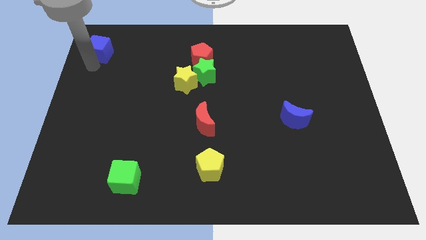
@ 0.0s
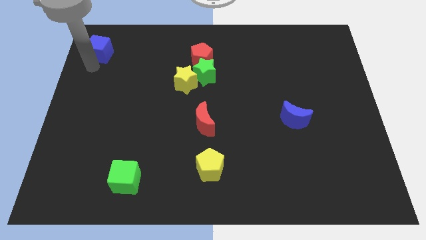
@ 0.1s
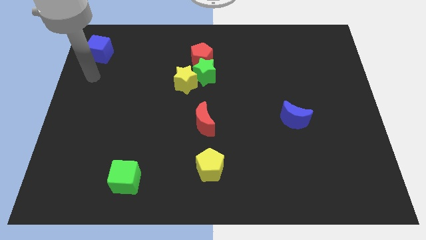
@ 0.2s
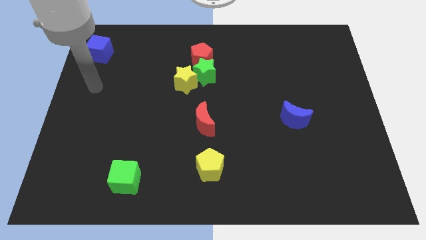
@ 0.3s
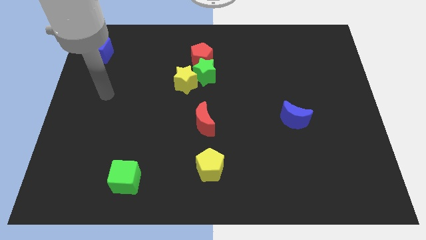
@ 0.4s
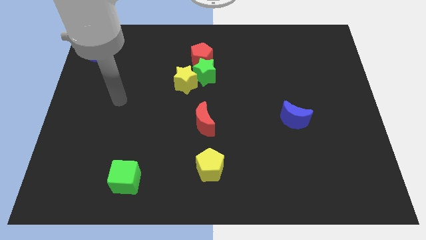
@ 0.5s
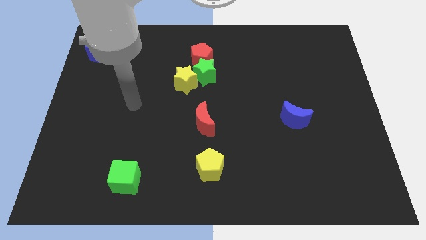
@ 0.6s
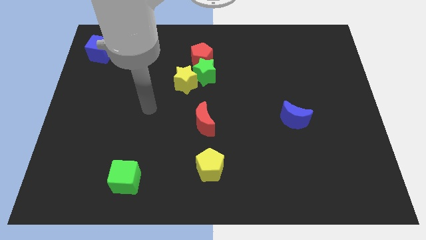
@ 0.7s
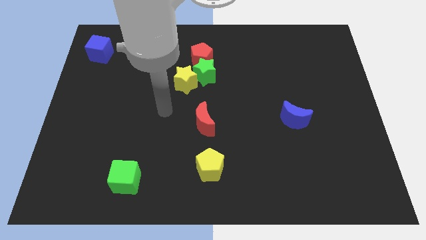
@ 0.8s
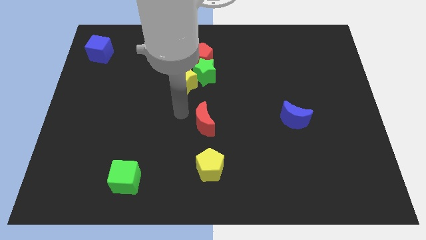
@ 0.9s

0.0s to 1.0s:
go away from the blue cube

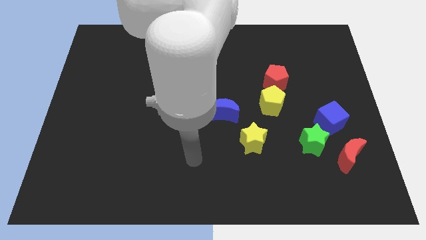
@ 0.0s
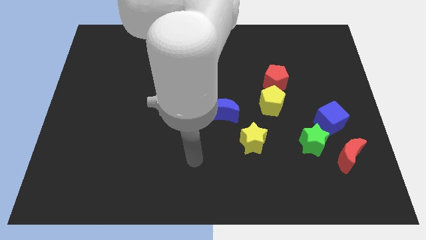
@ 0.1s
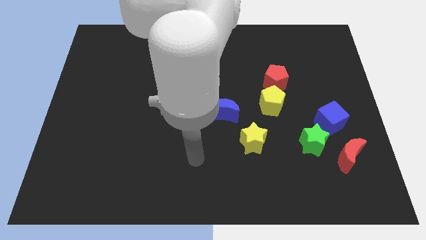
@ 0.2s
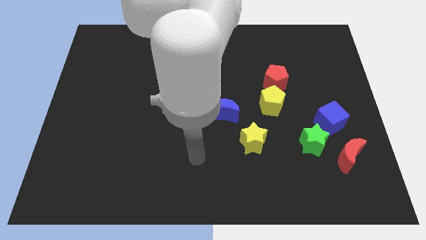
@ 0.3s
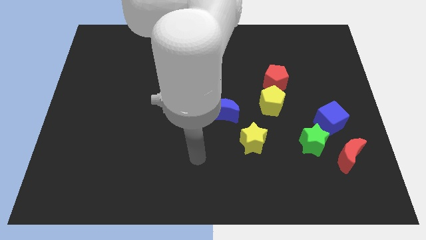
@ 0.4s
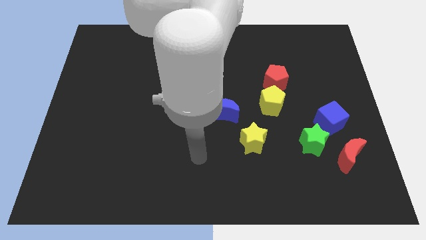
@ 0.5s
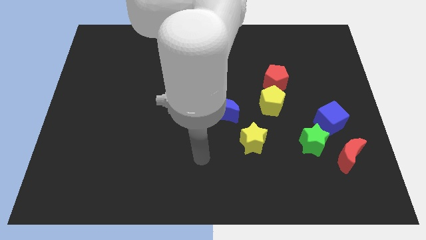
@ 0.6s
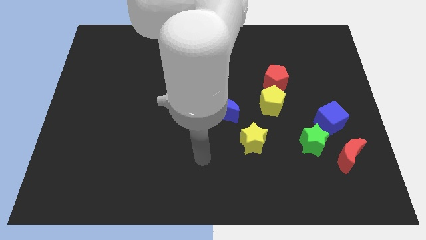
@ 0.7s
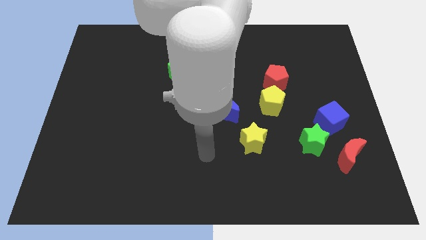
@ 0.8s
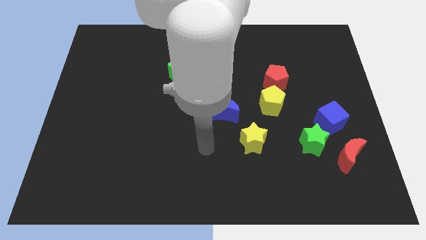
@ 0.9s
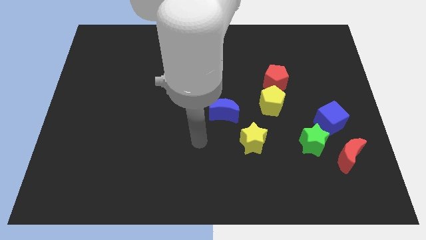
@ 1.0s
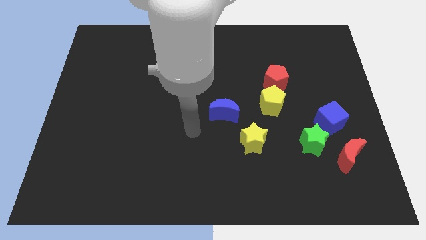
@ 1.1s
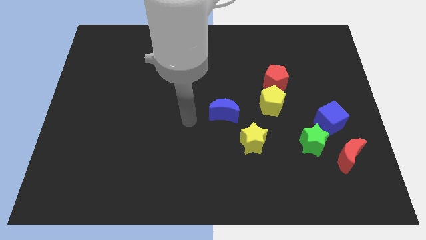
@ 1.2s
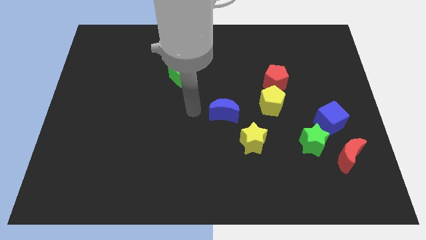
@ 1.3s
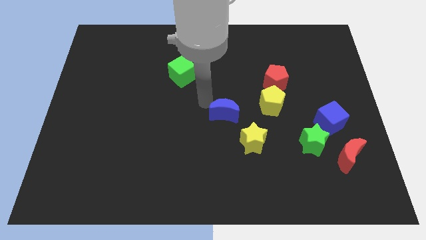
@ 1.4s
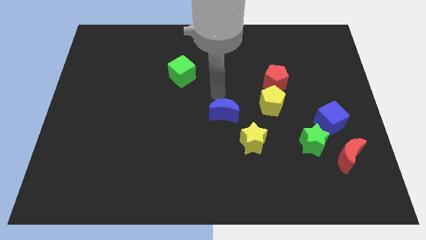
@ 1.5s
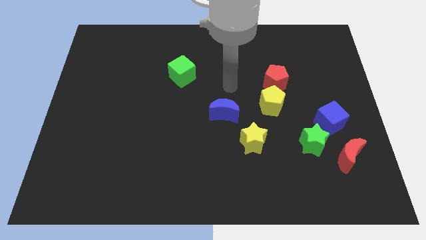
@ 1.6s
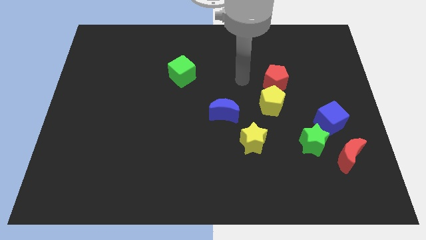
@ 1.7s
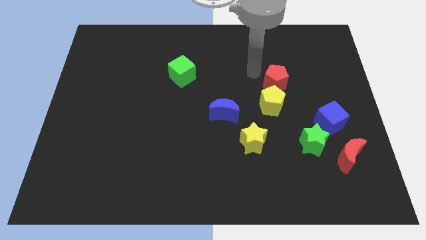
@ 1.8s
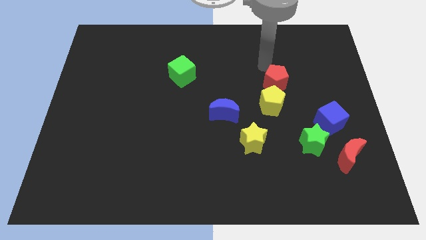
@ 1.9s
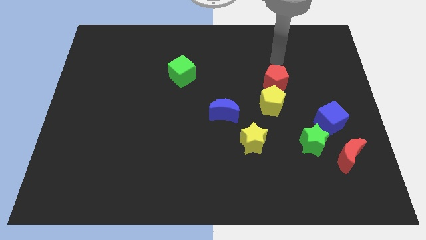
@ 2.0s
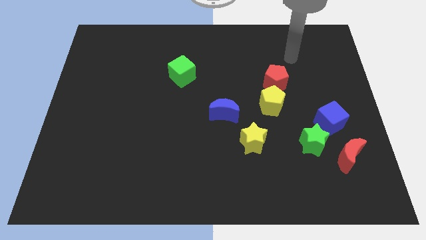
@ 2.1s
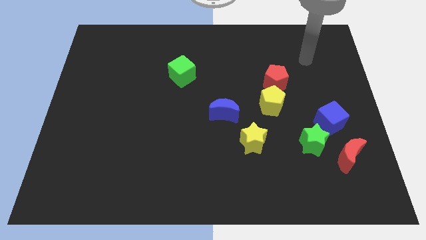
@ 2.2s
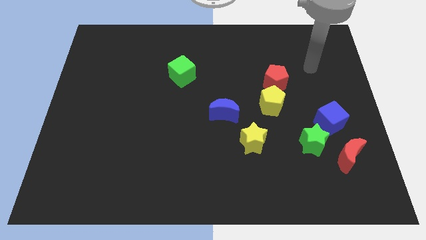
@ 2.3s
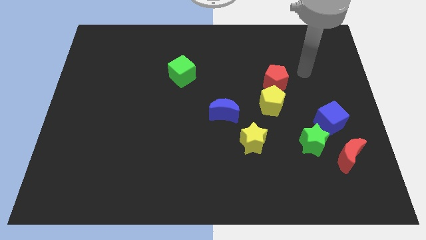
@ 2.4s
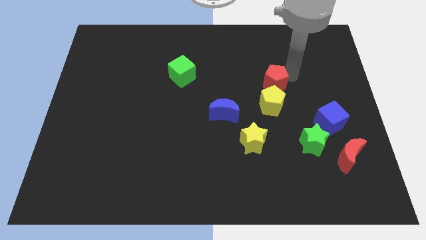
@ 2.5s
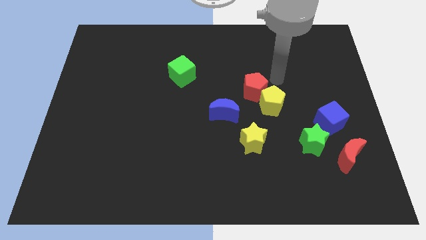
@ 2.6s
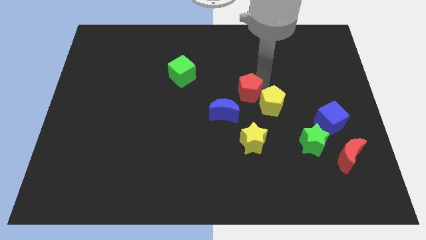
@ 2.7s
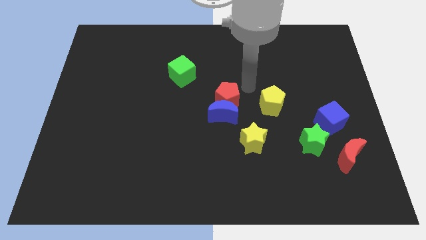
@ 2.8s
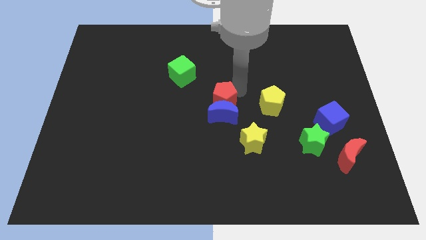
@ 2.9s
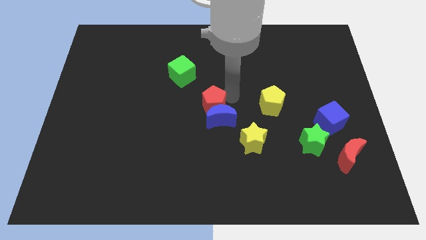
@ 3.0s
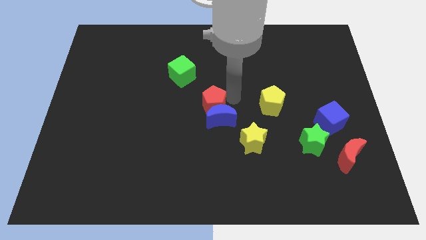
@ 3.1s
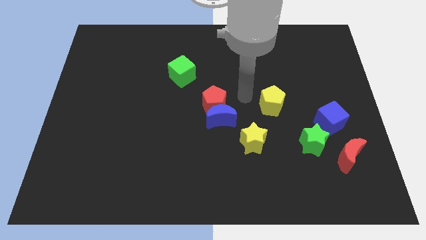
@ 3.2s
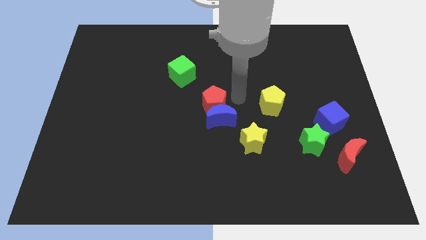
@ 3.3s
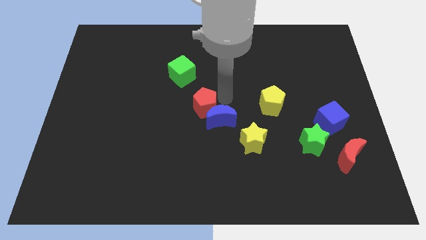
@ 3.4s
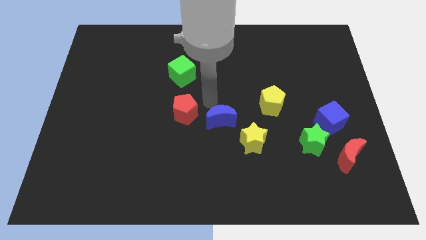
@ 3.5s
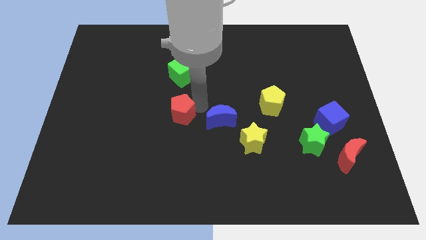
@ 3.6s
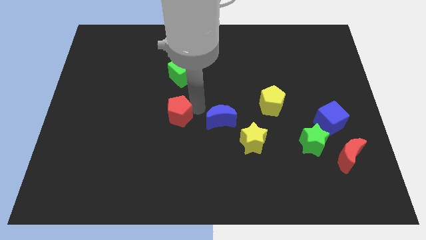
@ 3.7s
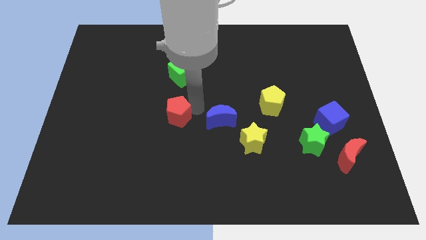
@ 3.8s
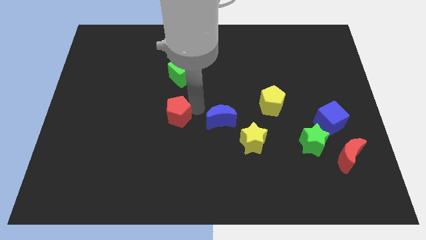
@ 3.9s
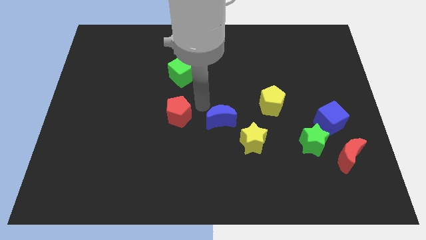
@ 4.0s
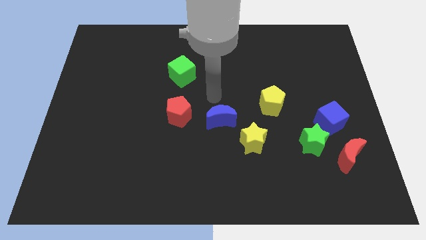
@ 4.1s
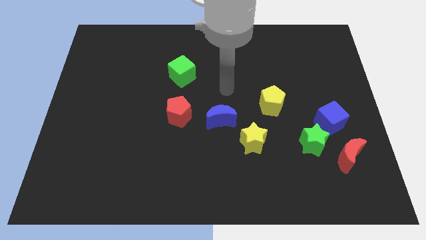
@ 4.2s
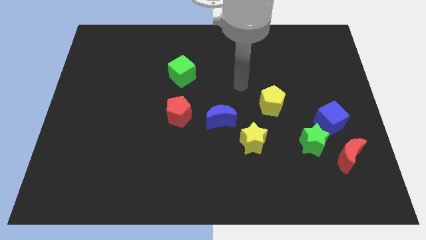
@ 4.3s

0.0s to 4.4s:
move the red pentagon to the bottom of the green cube

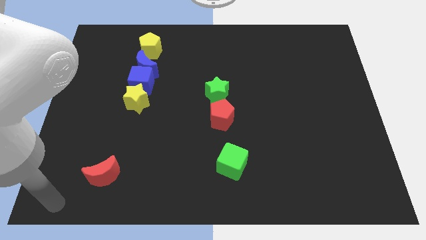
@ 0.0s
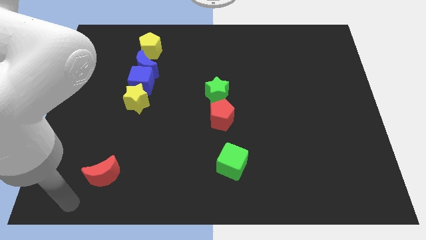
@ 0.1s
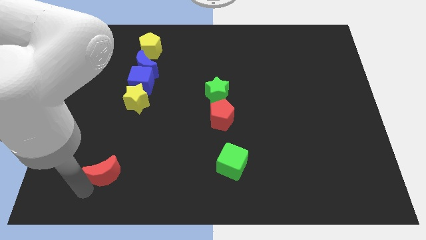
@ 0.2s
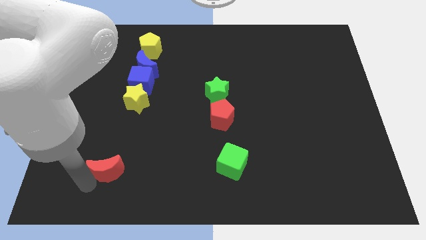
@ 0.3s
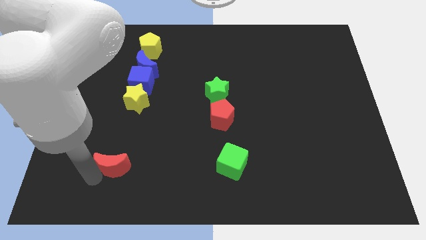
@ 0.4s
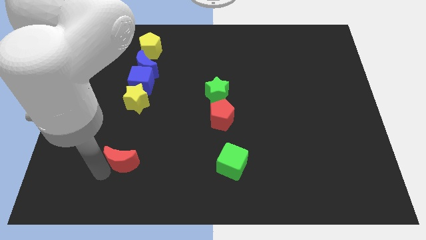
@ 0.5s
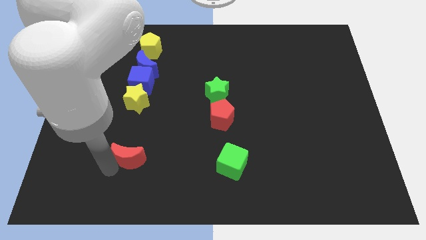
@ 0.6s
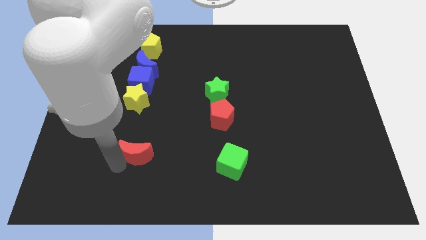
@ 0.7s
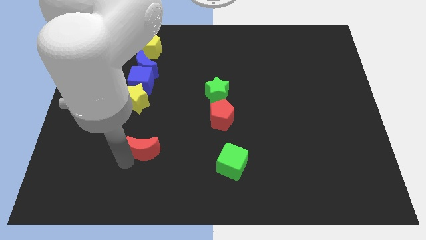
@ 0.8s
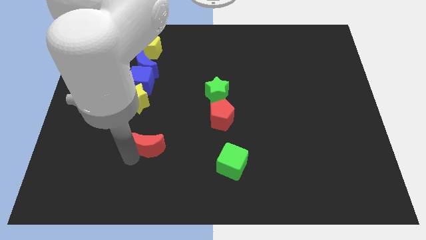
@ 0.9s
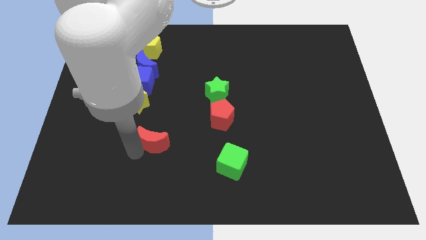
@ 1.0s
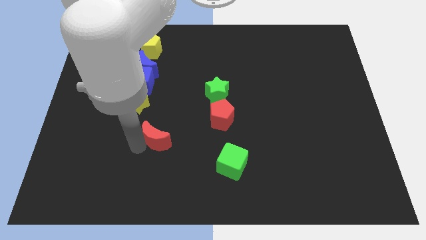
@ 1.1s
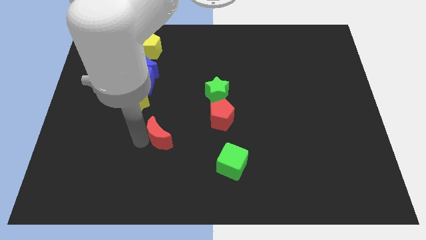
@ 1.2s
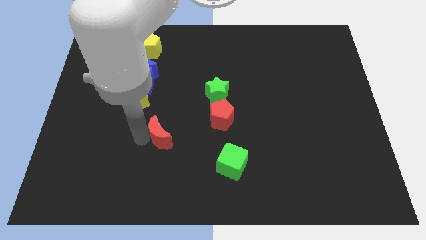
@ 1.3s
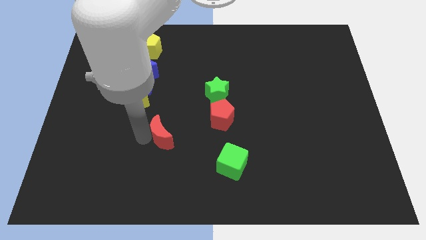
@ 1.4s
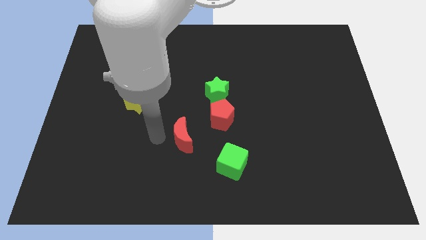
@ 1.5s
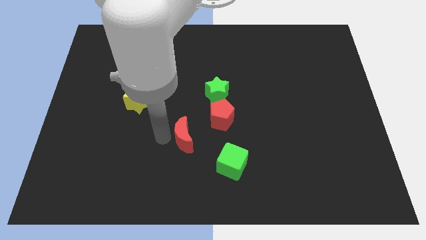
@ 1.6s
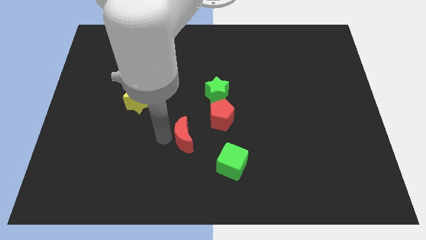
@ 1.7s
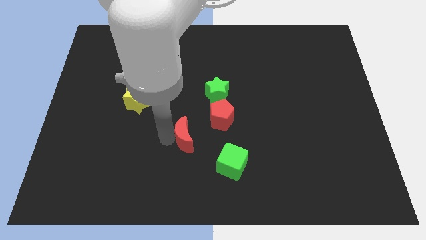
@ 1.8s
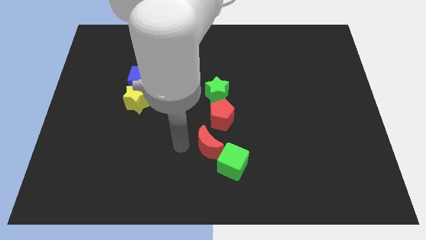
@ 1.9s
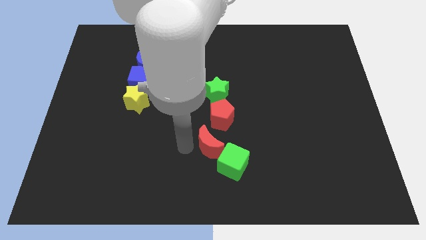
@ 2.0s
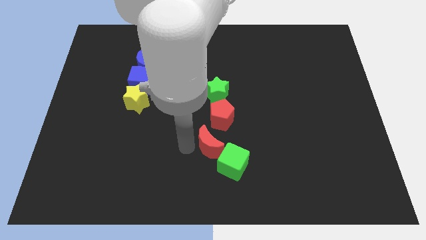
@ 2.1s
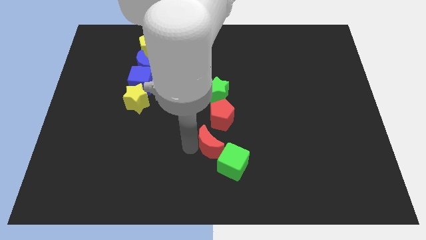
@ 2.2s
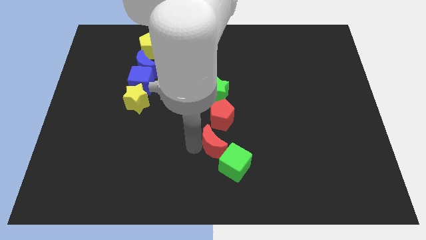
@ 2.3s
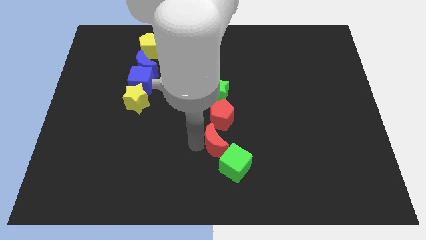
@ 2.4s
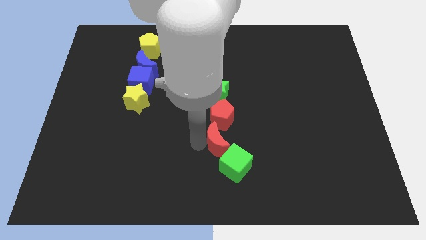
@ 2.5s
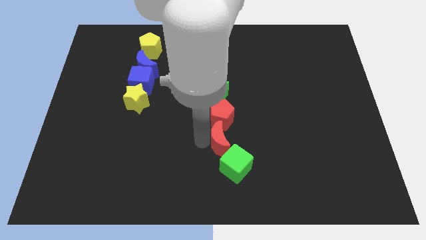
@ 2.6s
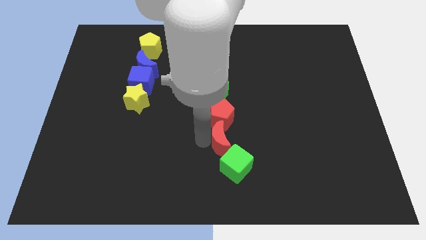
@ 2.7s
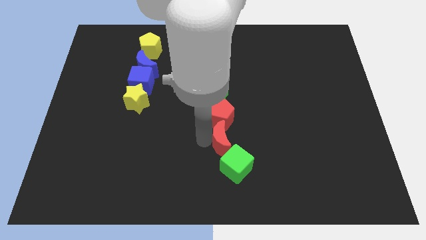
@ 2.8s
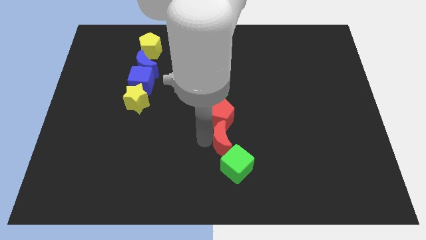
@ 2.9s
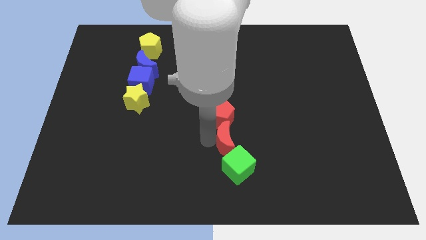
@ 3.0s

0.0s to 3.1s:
place red moon in between red pentagon and green cube

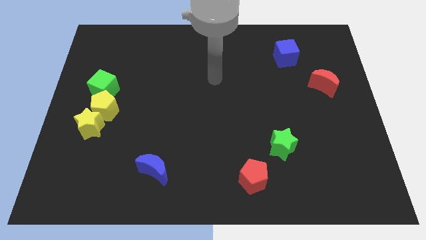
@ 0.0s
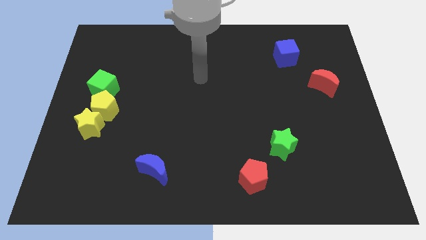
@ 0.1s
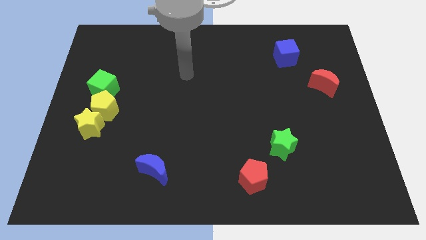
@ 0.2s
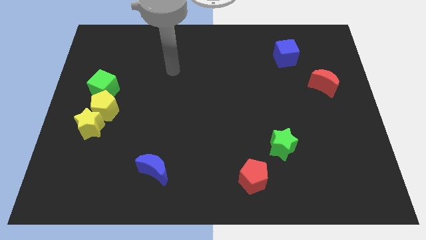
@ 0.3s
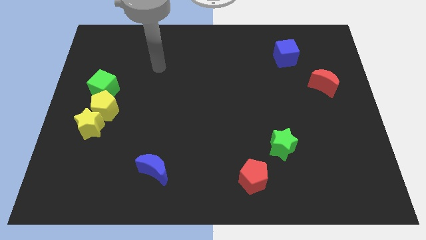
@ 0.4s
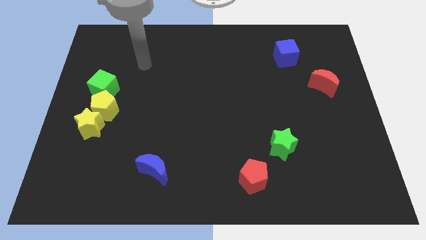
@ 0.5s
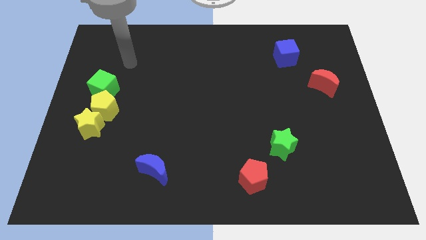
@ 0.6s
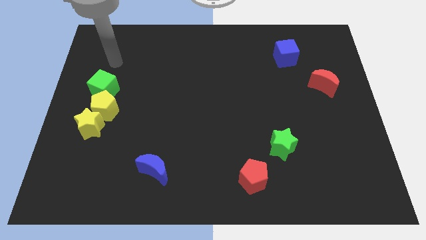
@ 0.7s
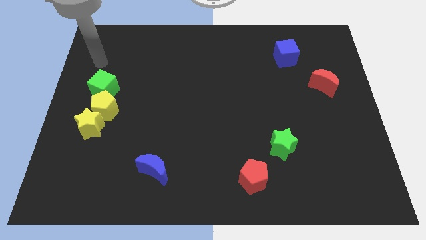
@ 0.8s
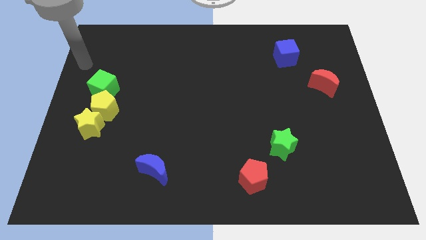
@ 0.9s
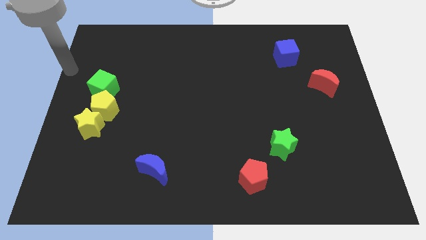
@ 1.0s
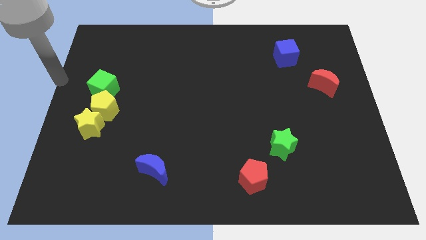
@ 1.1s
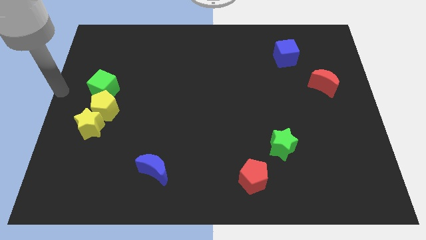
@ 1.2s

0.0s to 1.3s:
point the arm at the left center of the board
